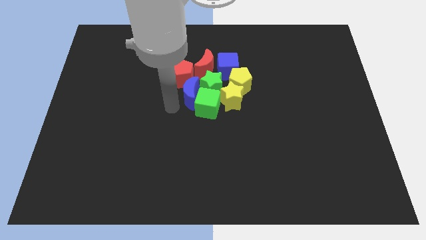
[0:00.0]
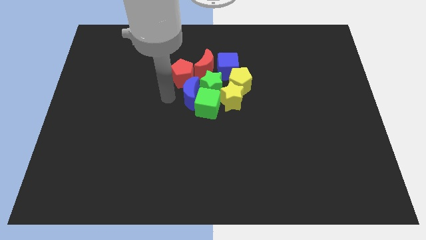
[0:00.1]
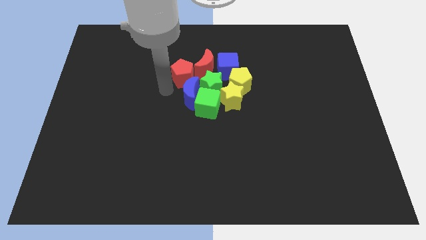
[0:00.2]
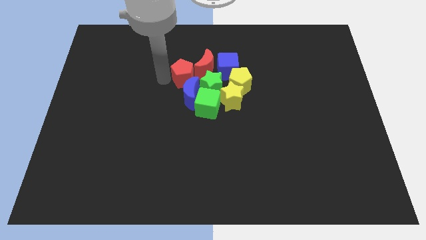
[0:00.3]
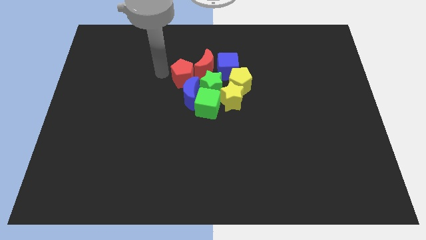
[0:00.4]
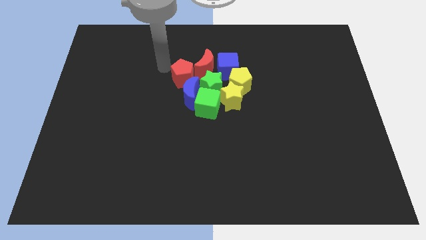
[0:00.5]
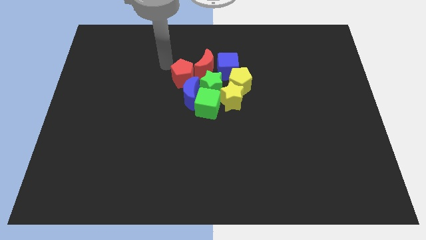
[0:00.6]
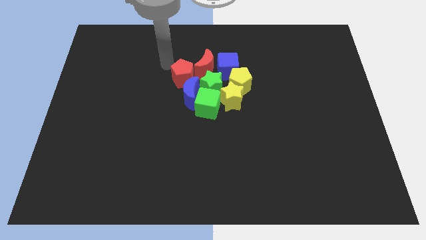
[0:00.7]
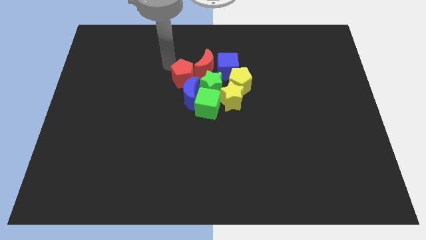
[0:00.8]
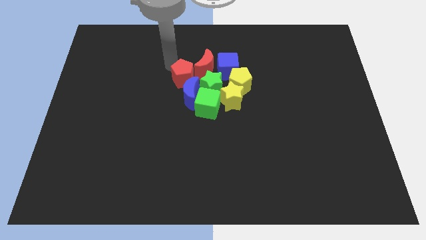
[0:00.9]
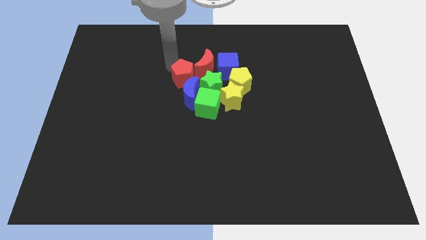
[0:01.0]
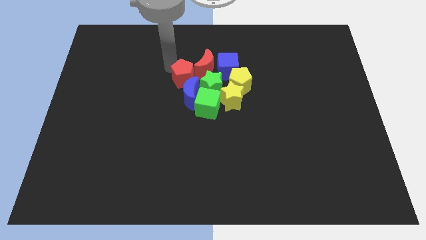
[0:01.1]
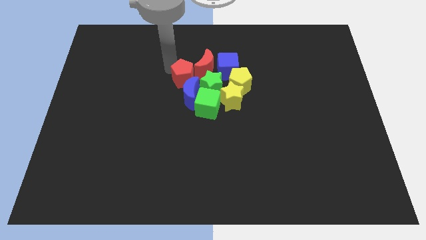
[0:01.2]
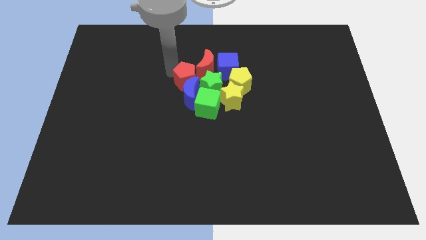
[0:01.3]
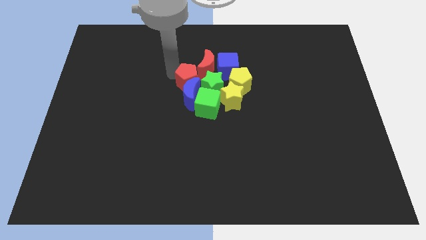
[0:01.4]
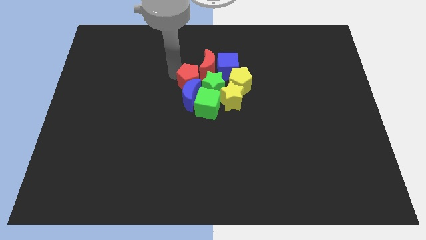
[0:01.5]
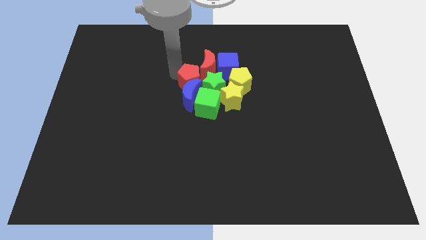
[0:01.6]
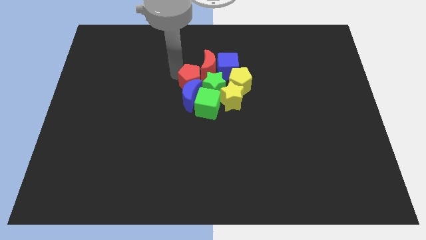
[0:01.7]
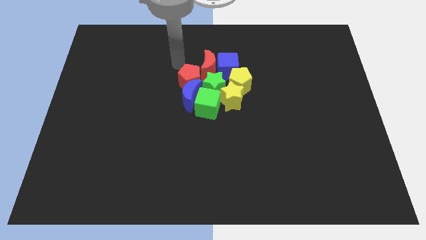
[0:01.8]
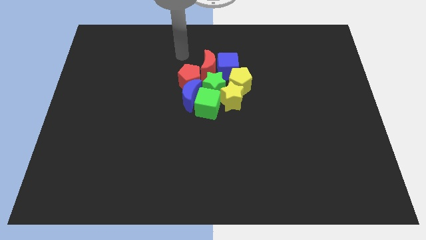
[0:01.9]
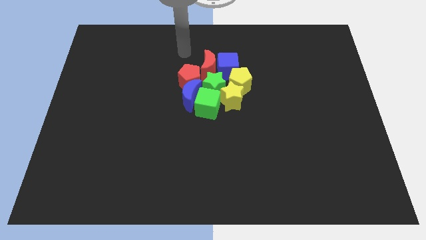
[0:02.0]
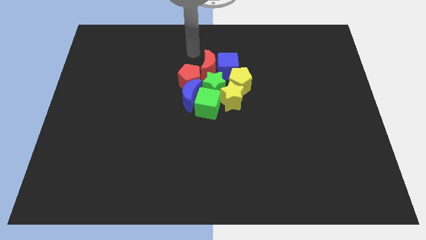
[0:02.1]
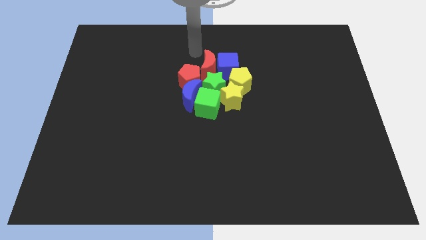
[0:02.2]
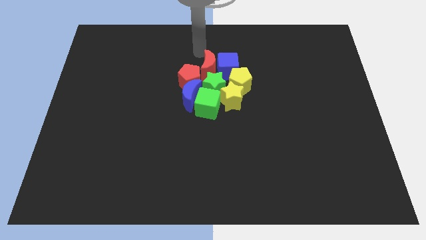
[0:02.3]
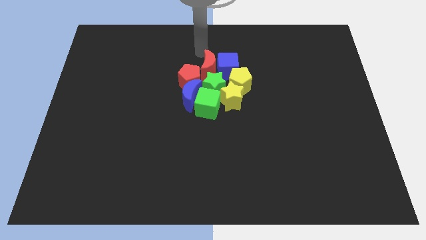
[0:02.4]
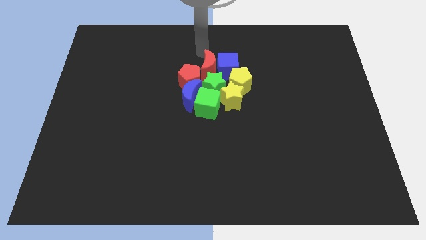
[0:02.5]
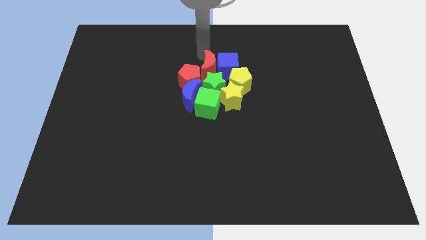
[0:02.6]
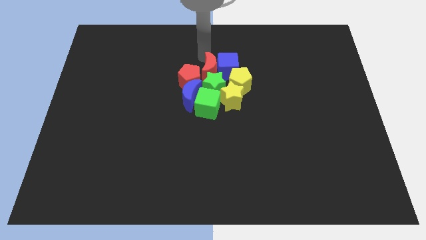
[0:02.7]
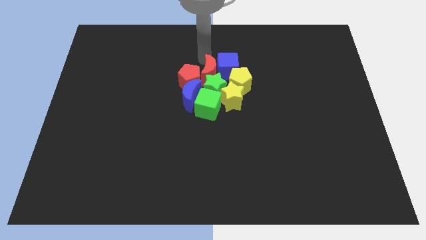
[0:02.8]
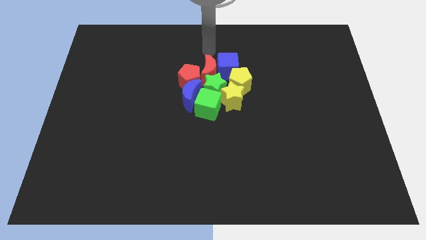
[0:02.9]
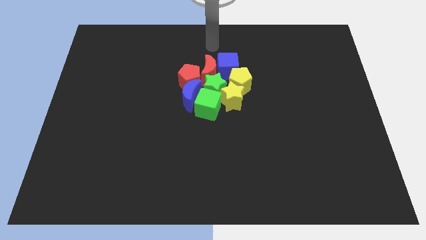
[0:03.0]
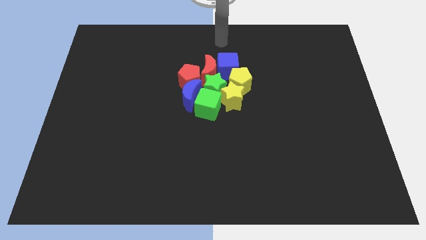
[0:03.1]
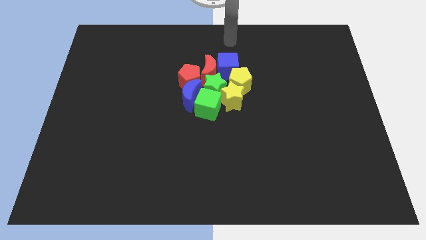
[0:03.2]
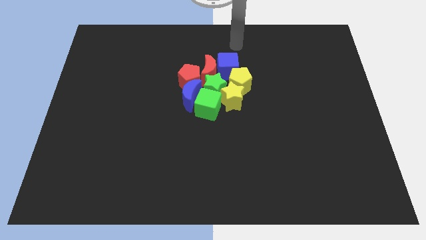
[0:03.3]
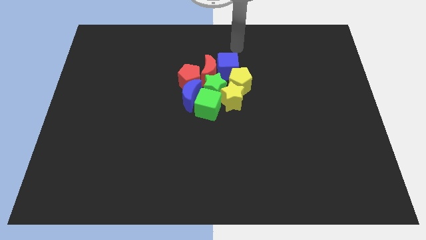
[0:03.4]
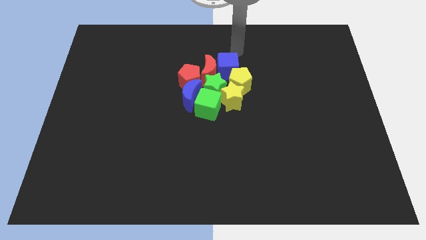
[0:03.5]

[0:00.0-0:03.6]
move your arm close to the red pentagon

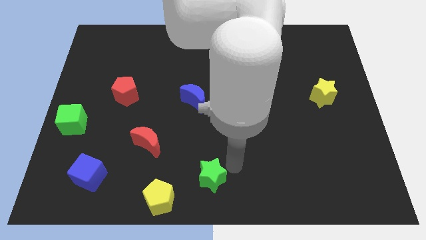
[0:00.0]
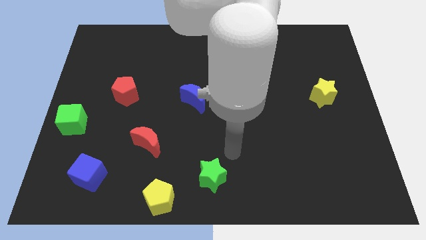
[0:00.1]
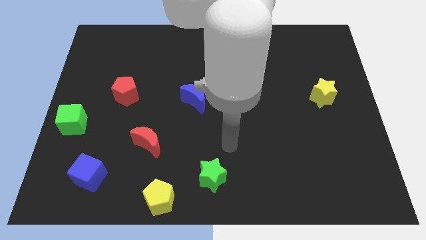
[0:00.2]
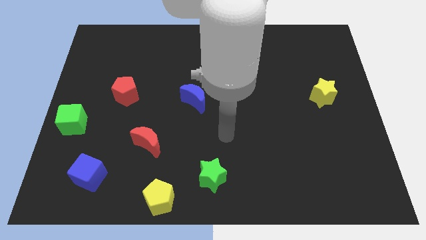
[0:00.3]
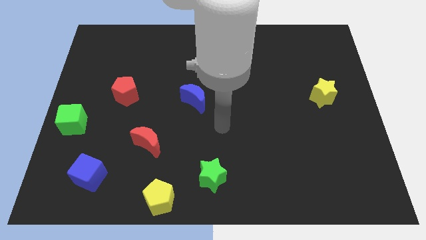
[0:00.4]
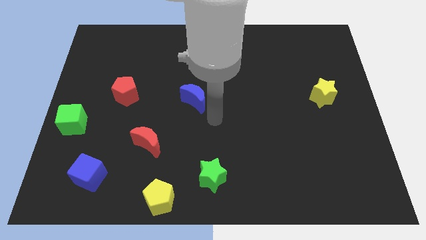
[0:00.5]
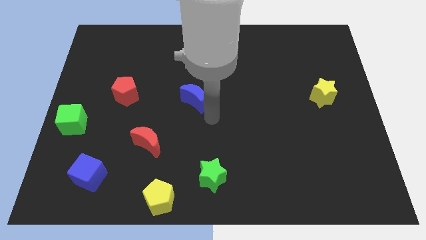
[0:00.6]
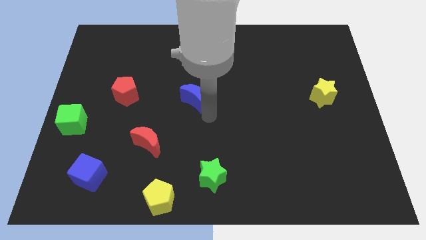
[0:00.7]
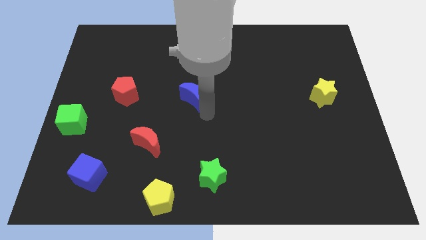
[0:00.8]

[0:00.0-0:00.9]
move the hand to the bottom of the bleu moon

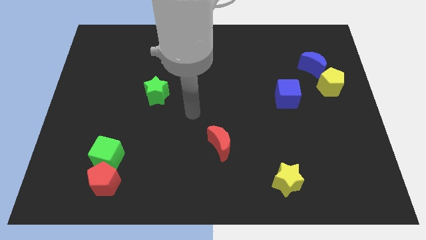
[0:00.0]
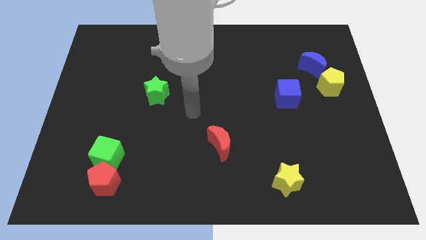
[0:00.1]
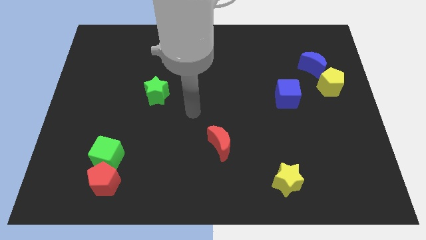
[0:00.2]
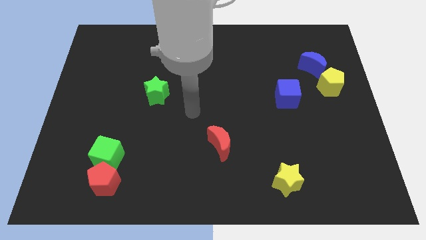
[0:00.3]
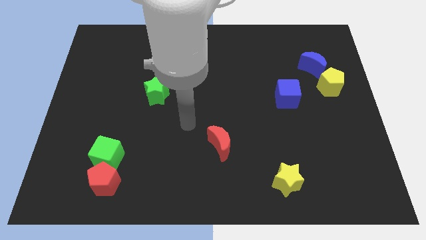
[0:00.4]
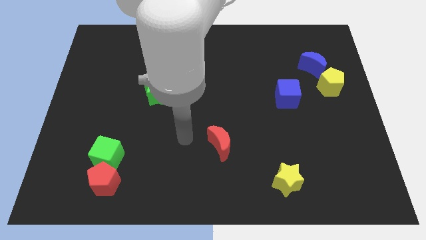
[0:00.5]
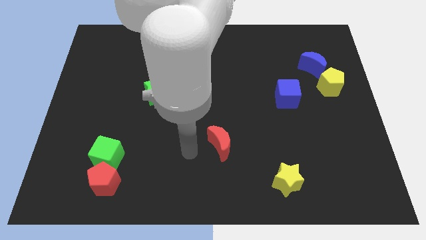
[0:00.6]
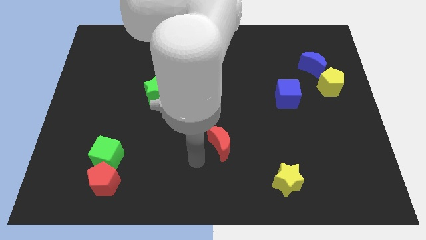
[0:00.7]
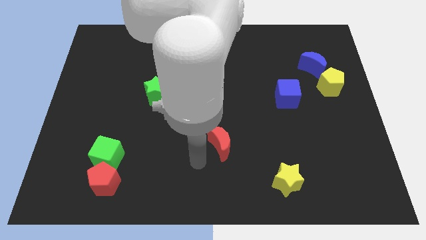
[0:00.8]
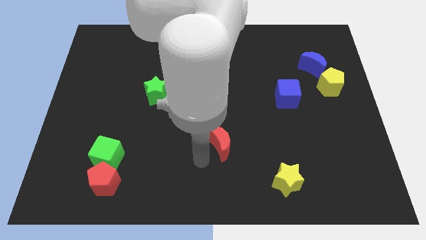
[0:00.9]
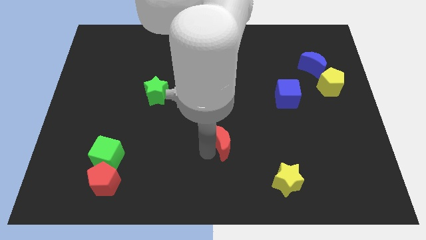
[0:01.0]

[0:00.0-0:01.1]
move your arm to the left side of red crescent

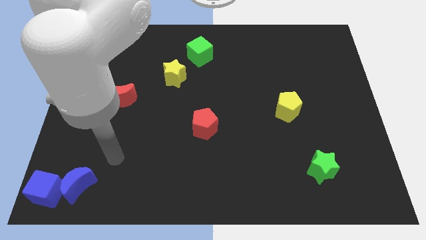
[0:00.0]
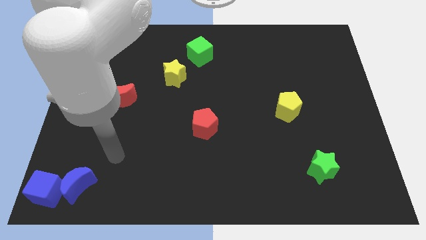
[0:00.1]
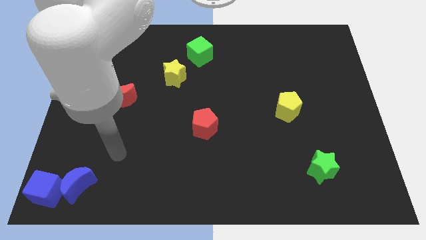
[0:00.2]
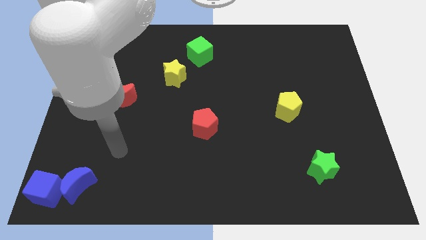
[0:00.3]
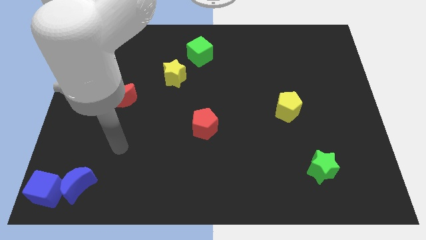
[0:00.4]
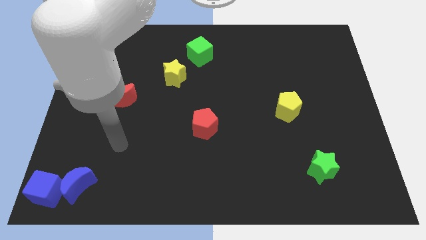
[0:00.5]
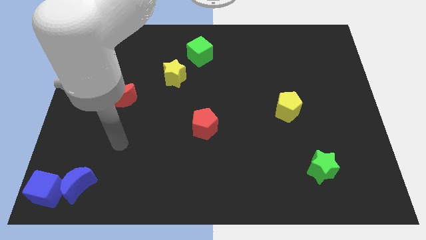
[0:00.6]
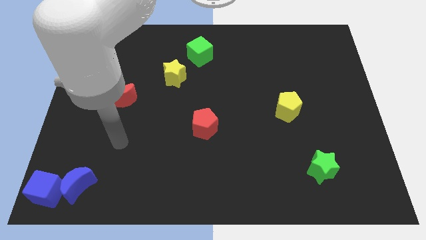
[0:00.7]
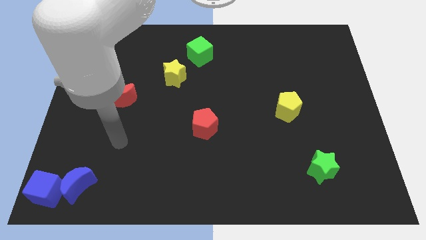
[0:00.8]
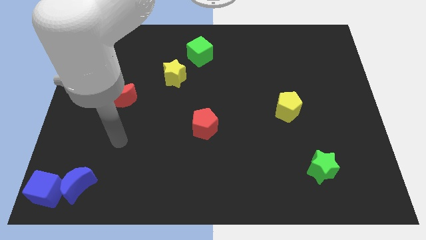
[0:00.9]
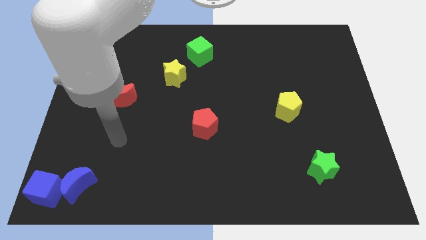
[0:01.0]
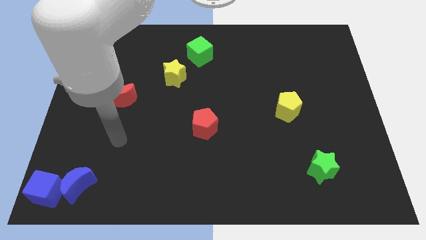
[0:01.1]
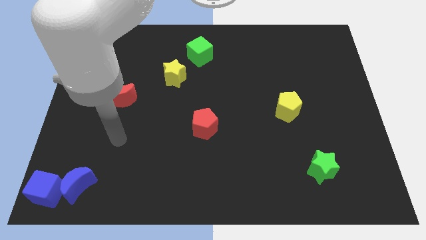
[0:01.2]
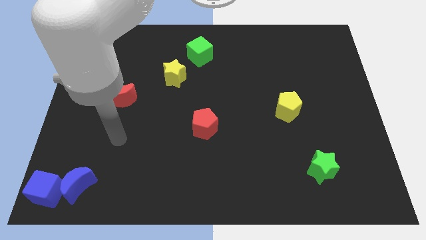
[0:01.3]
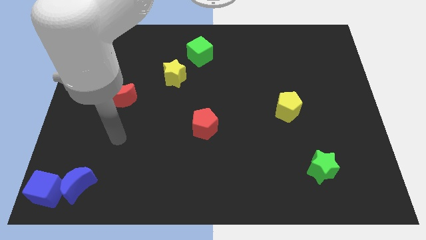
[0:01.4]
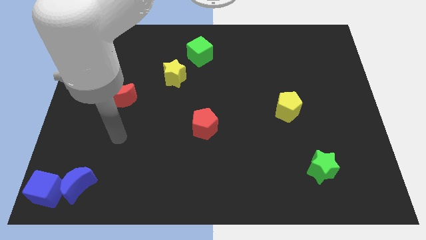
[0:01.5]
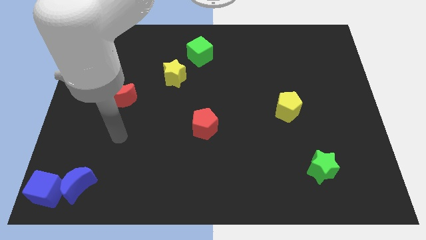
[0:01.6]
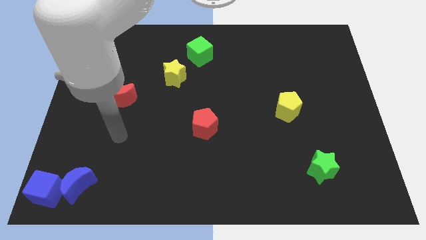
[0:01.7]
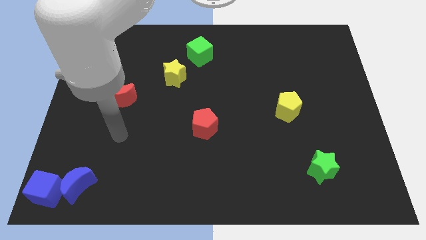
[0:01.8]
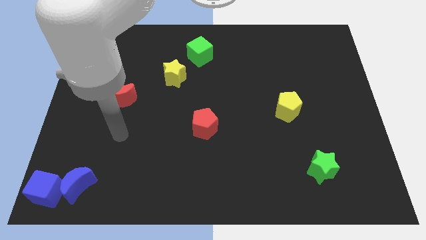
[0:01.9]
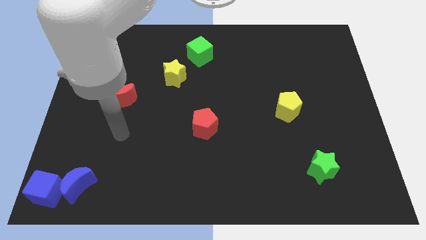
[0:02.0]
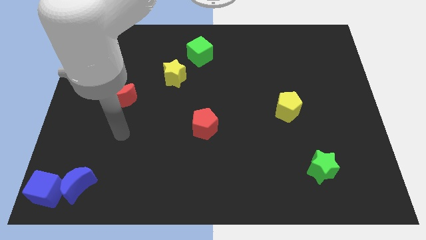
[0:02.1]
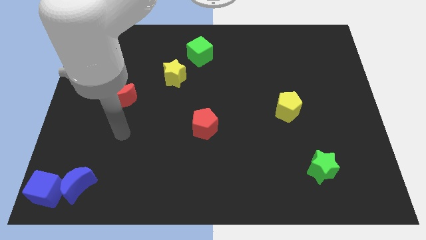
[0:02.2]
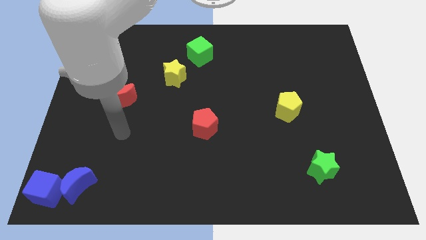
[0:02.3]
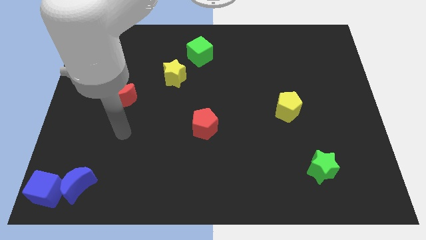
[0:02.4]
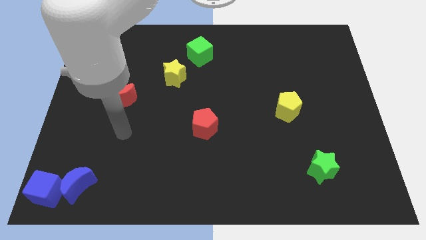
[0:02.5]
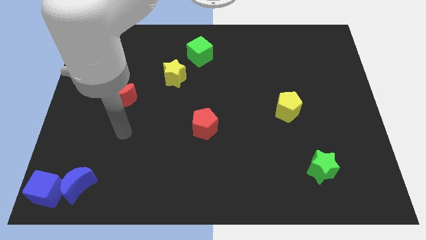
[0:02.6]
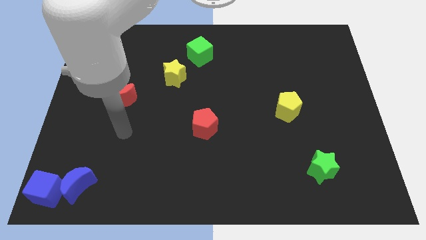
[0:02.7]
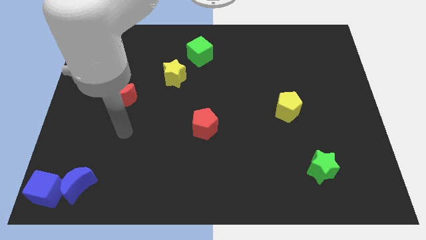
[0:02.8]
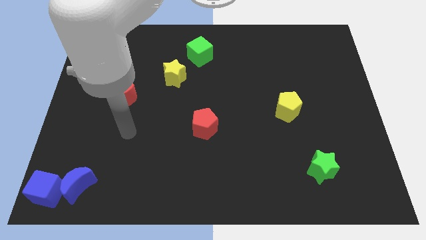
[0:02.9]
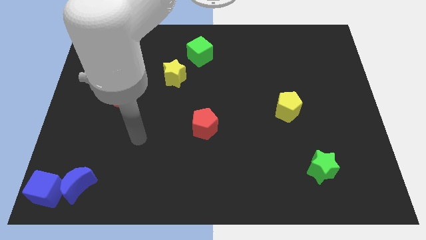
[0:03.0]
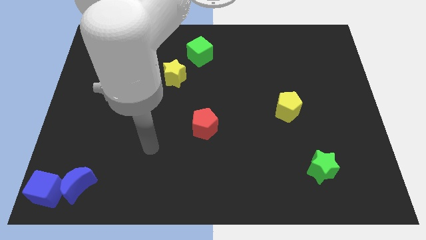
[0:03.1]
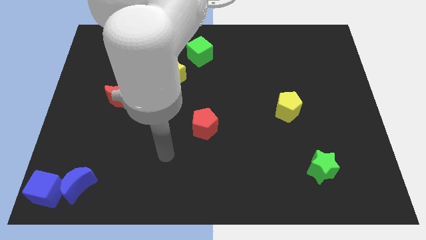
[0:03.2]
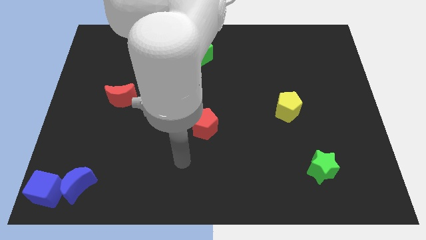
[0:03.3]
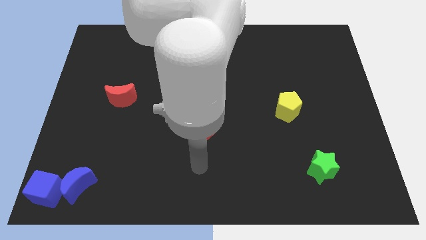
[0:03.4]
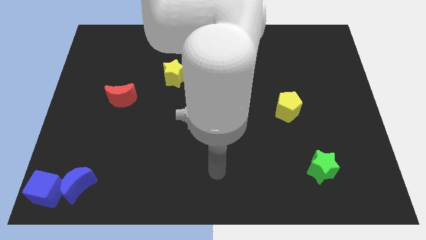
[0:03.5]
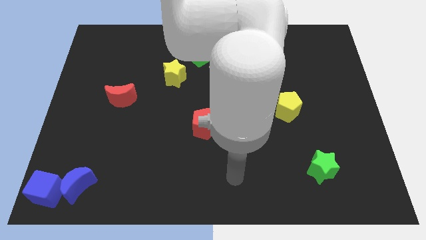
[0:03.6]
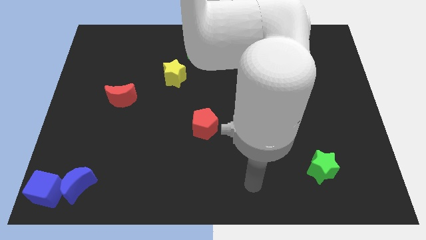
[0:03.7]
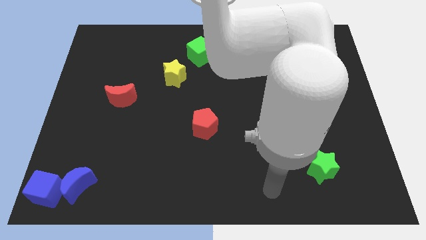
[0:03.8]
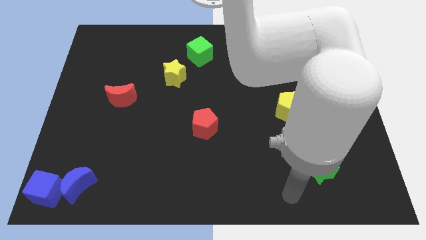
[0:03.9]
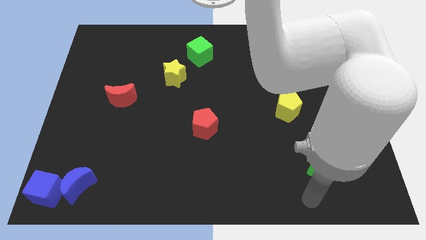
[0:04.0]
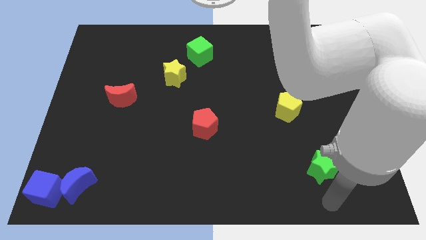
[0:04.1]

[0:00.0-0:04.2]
point the arm below the green star
